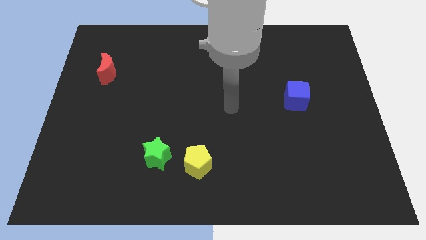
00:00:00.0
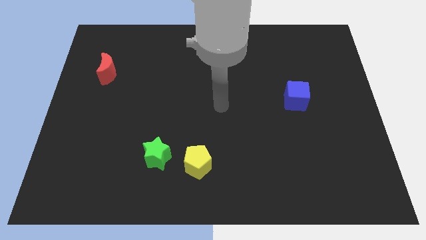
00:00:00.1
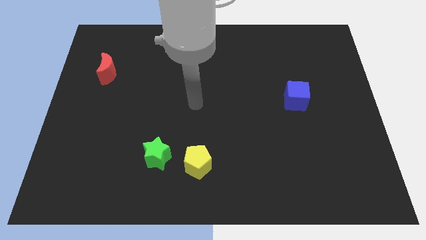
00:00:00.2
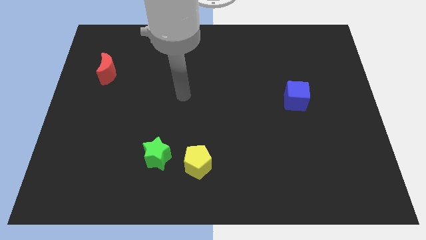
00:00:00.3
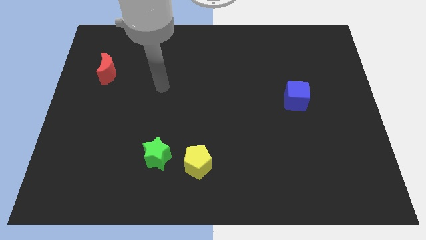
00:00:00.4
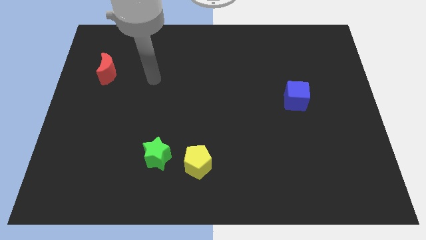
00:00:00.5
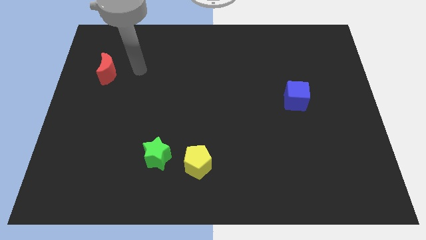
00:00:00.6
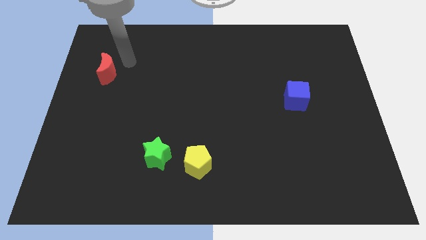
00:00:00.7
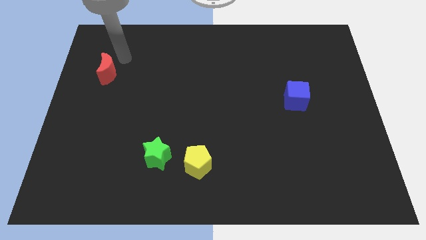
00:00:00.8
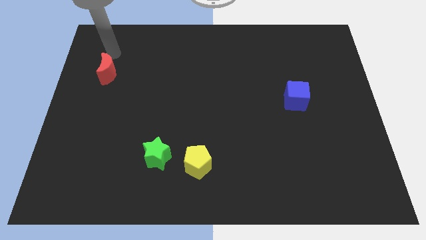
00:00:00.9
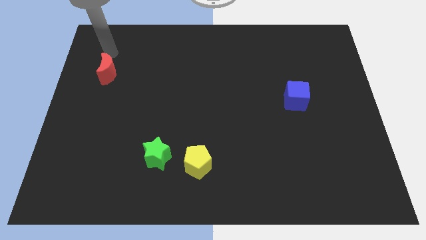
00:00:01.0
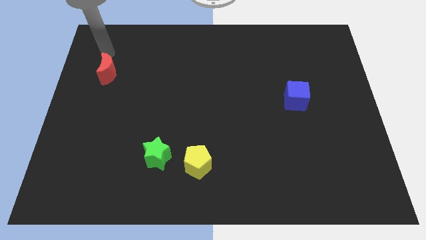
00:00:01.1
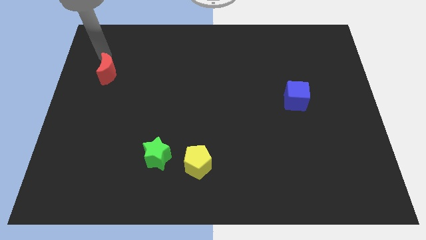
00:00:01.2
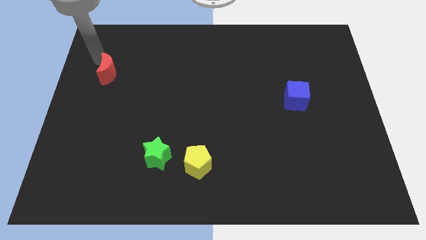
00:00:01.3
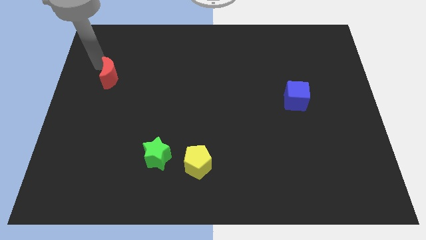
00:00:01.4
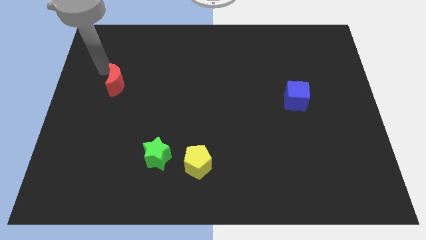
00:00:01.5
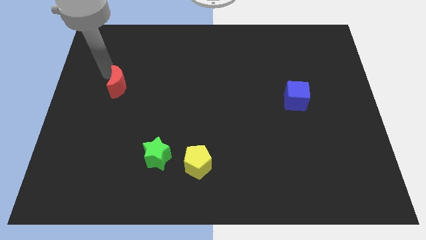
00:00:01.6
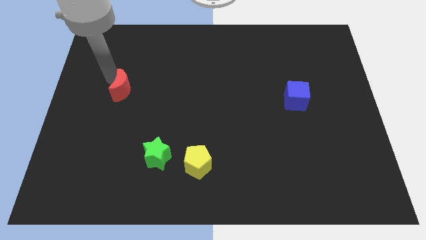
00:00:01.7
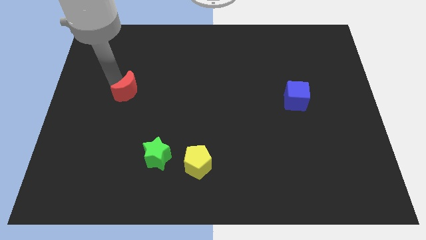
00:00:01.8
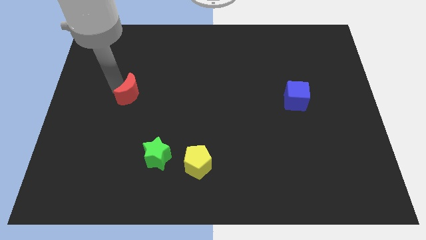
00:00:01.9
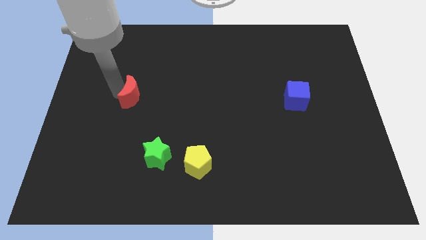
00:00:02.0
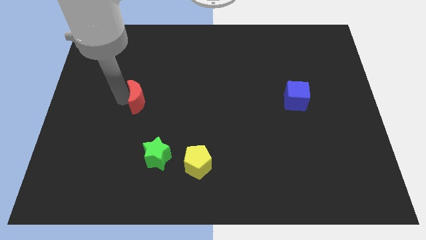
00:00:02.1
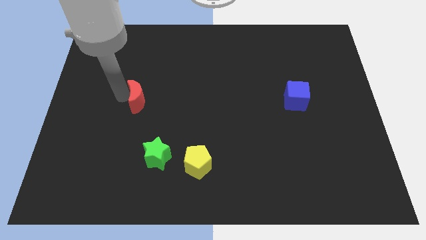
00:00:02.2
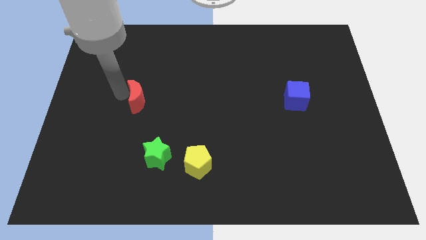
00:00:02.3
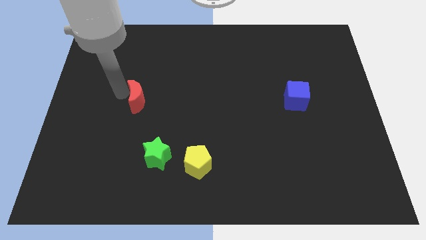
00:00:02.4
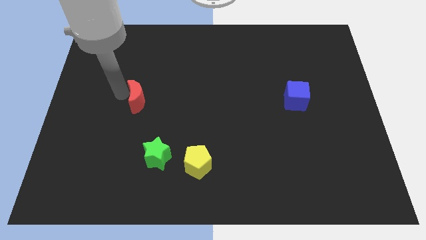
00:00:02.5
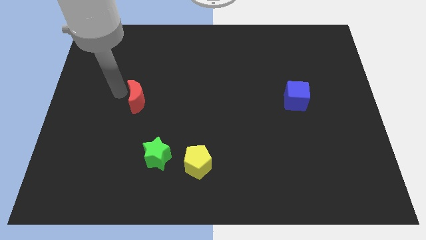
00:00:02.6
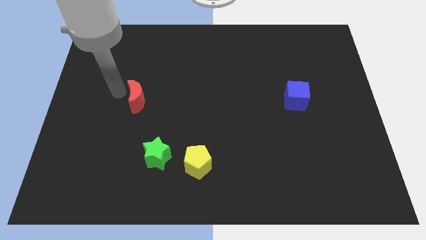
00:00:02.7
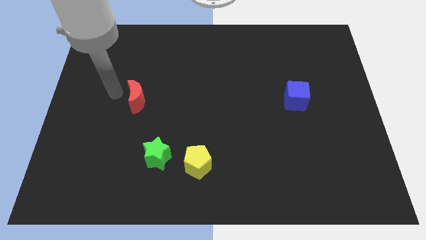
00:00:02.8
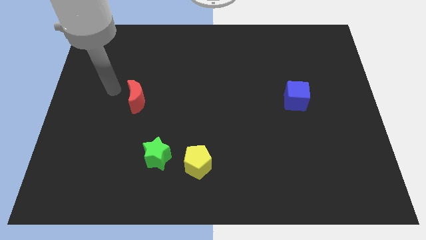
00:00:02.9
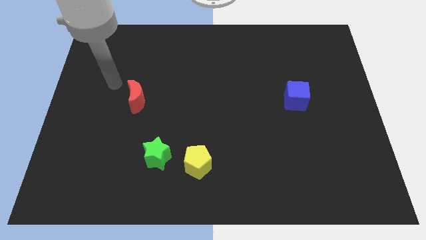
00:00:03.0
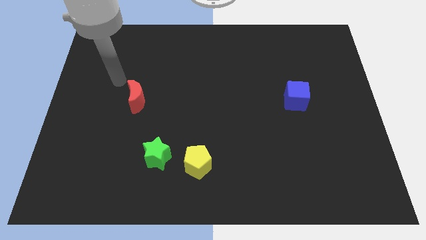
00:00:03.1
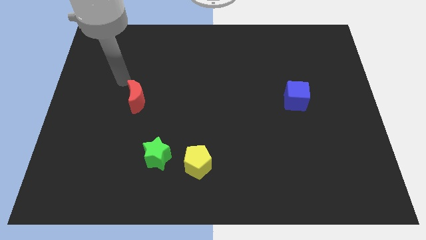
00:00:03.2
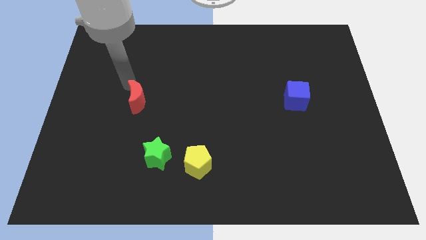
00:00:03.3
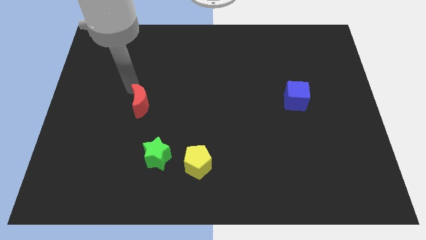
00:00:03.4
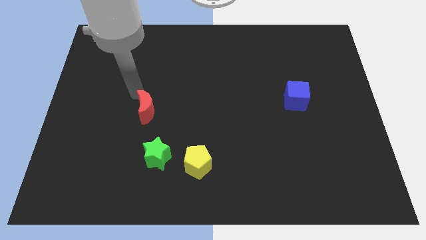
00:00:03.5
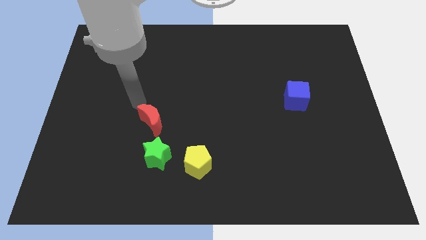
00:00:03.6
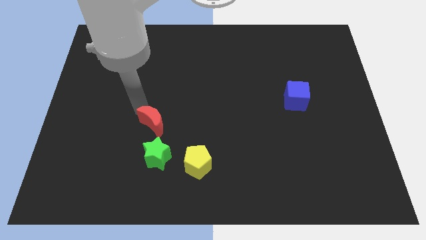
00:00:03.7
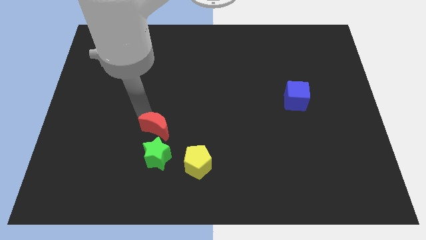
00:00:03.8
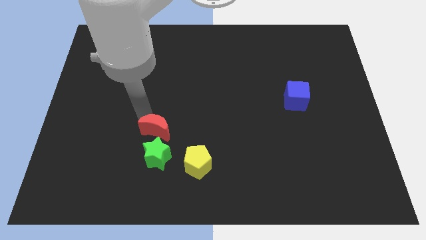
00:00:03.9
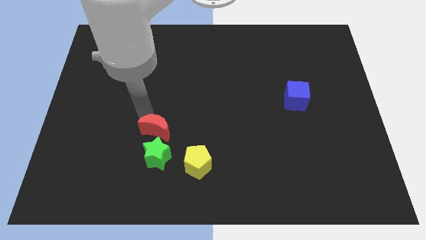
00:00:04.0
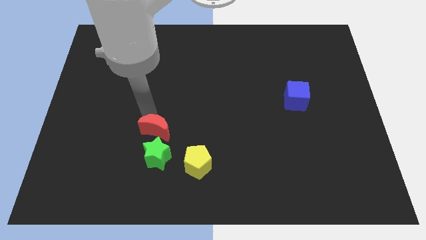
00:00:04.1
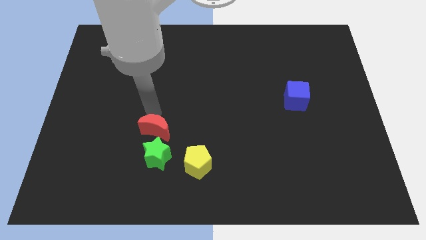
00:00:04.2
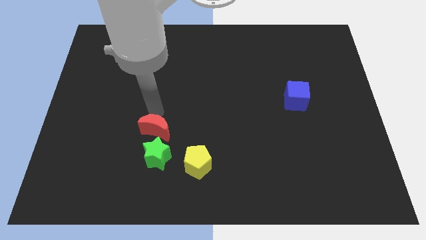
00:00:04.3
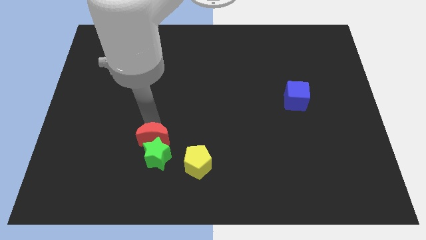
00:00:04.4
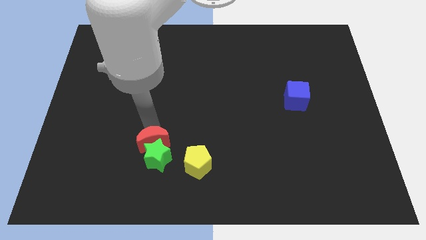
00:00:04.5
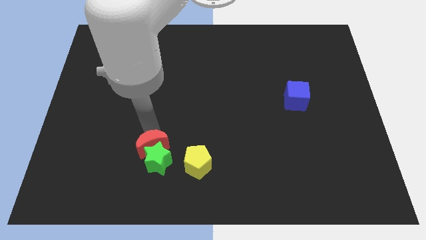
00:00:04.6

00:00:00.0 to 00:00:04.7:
put the moon close to the star

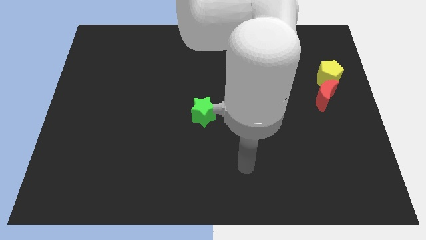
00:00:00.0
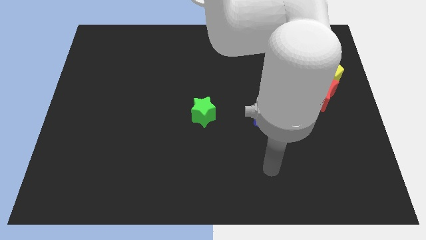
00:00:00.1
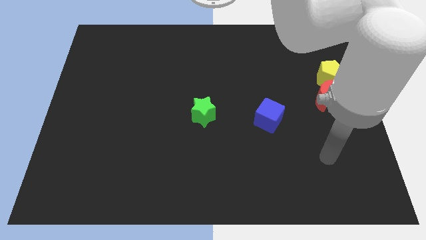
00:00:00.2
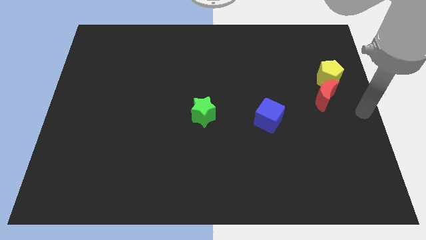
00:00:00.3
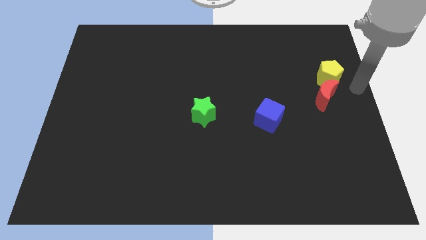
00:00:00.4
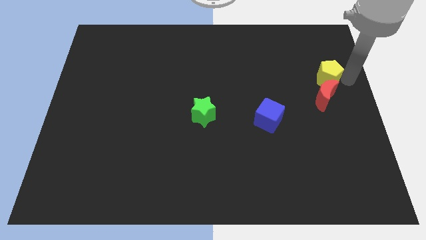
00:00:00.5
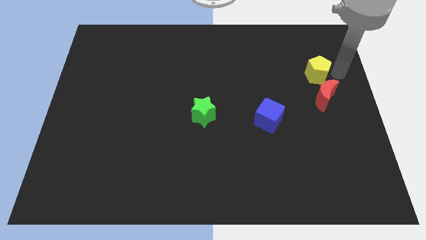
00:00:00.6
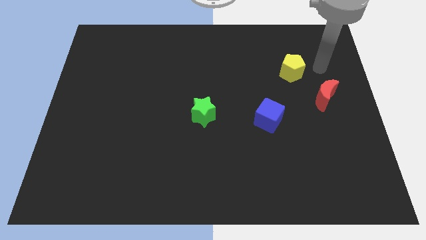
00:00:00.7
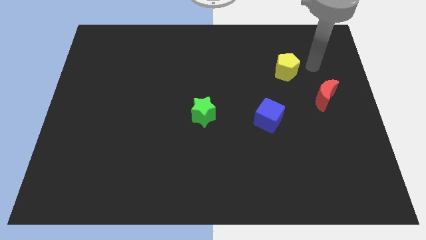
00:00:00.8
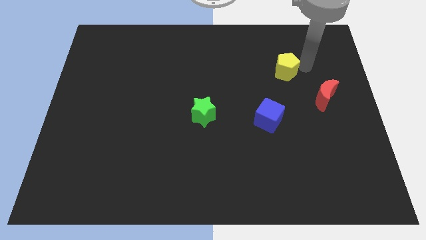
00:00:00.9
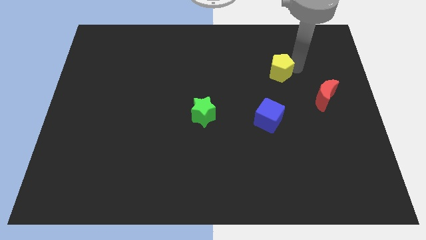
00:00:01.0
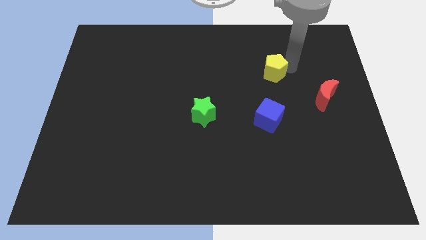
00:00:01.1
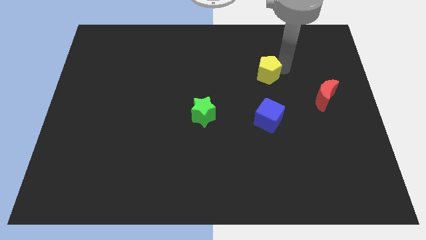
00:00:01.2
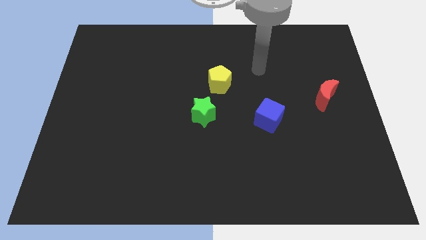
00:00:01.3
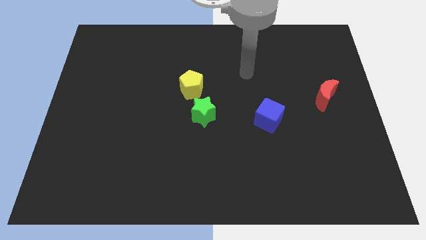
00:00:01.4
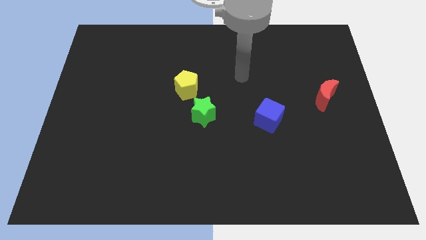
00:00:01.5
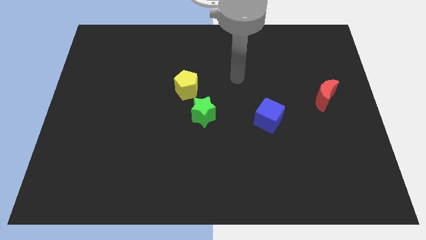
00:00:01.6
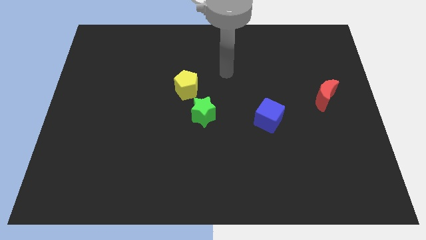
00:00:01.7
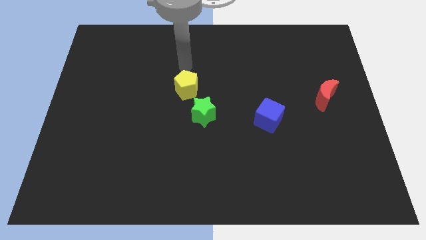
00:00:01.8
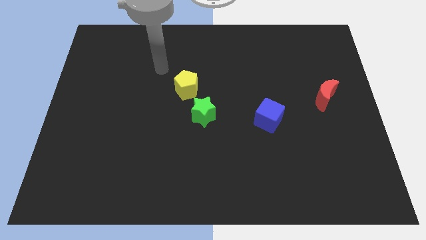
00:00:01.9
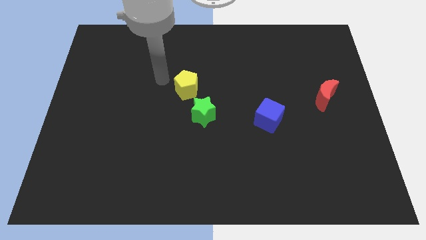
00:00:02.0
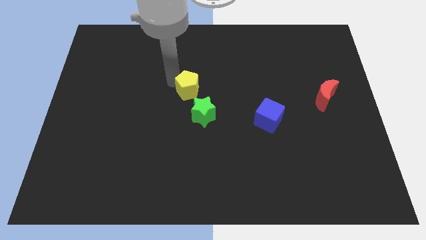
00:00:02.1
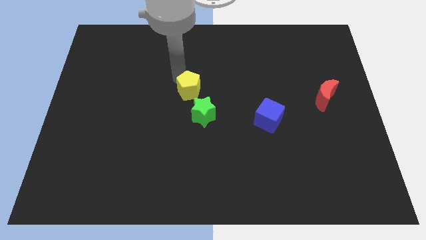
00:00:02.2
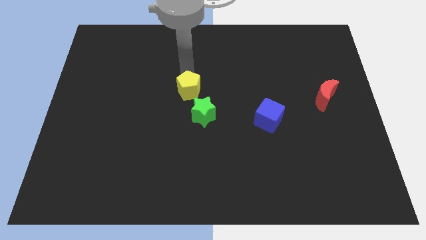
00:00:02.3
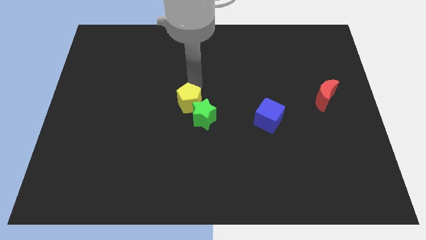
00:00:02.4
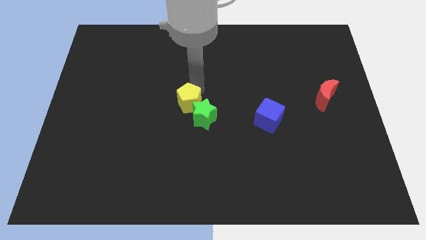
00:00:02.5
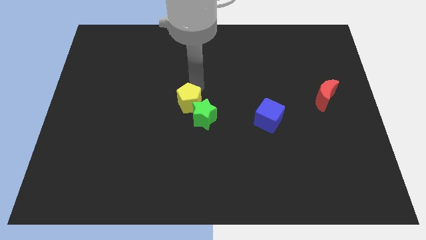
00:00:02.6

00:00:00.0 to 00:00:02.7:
slide the yellow pentagon close to the green star

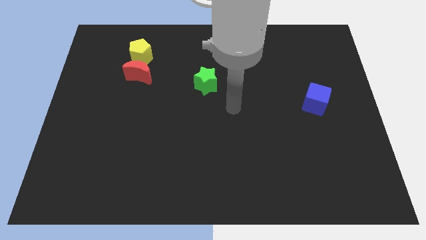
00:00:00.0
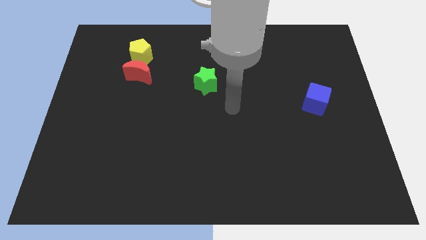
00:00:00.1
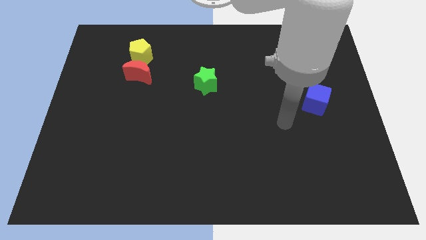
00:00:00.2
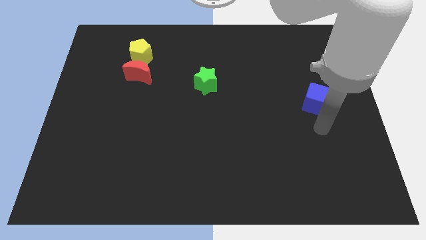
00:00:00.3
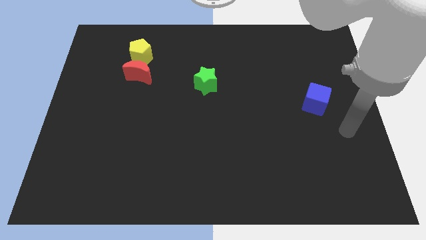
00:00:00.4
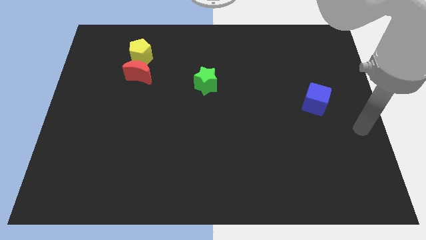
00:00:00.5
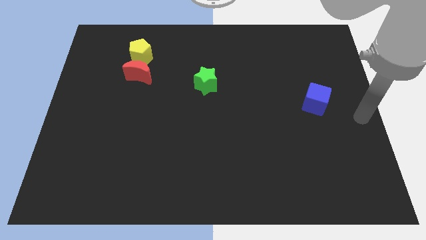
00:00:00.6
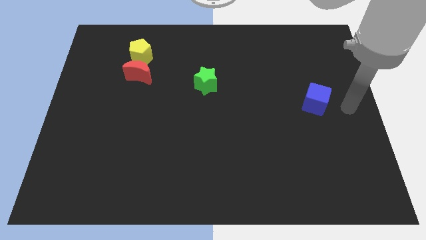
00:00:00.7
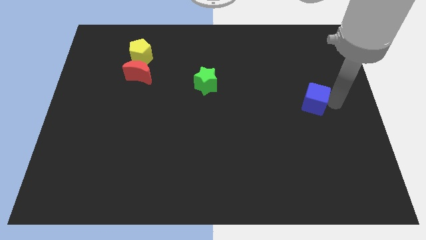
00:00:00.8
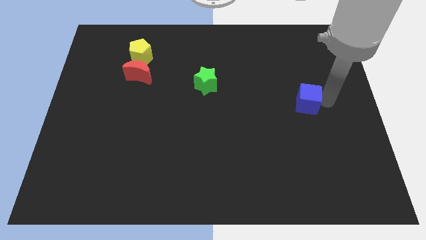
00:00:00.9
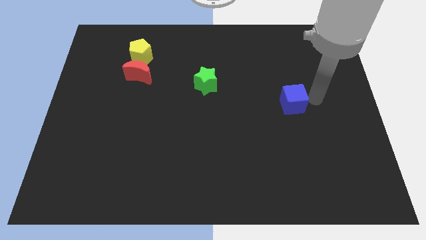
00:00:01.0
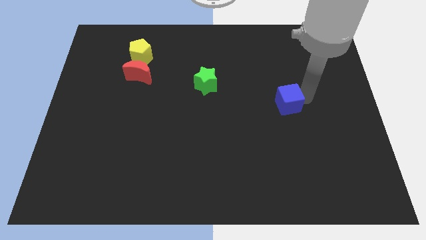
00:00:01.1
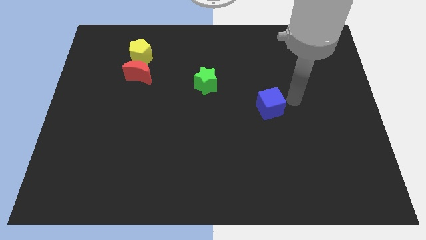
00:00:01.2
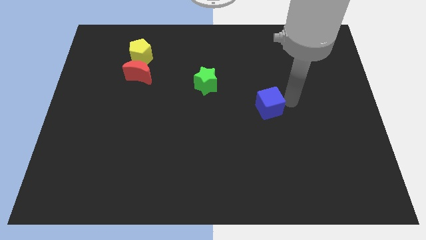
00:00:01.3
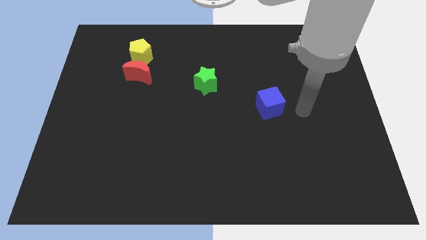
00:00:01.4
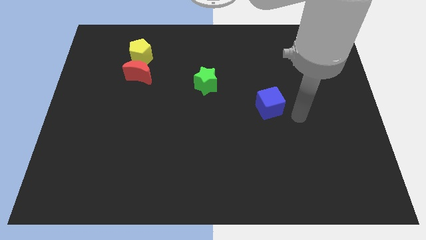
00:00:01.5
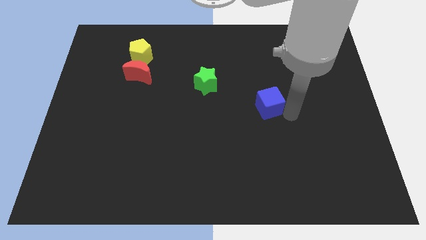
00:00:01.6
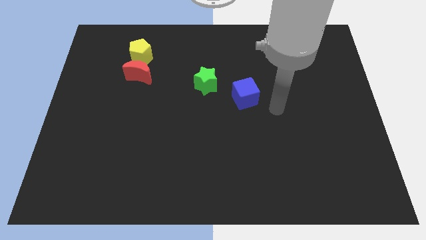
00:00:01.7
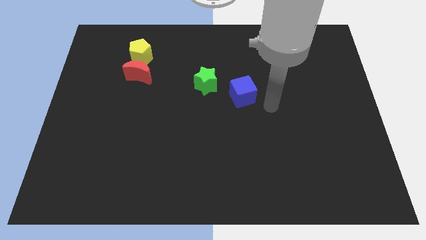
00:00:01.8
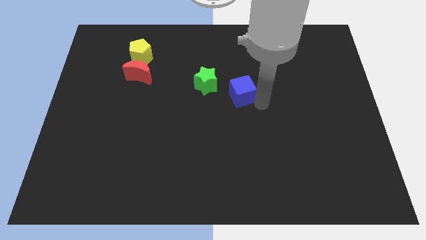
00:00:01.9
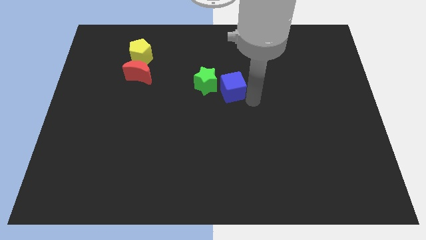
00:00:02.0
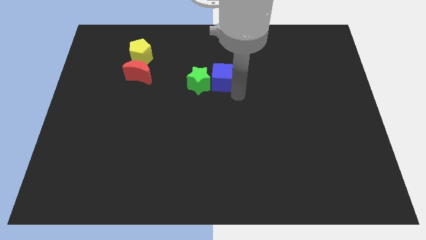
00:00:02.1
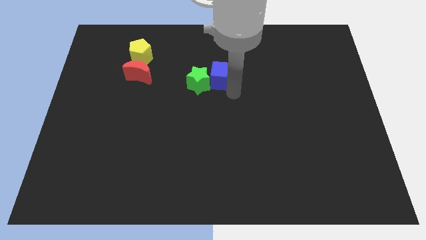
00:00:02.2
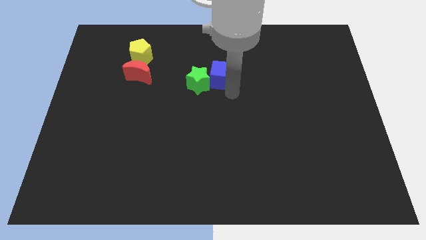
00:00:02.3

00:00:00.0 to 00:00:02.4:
slide the cube towards the star
